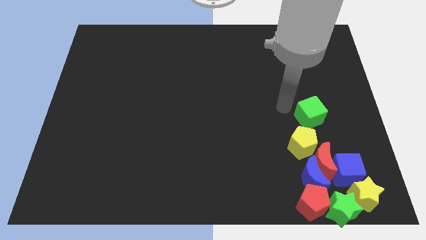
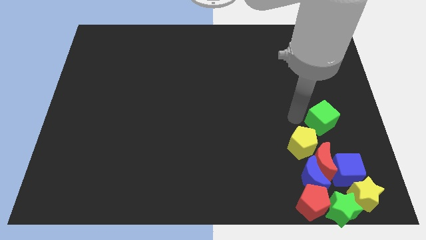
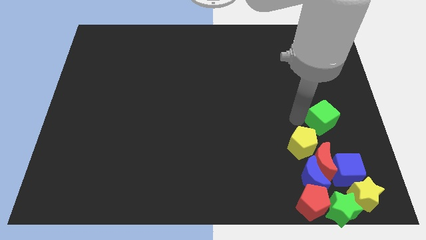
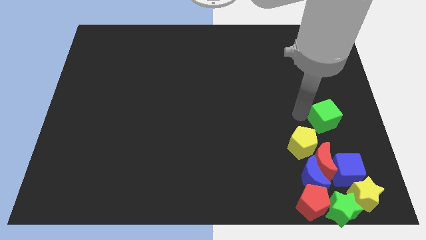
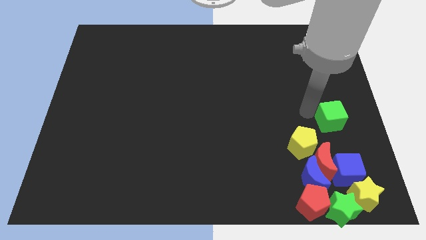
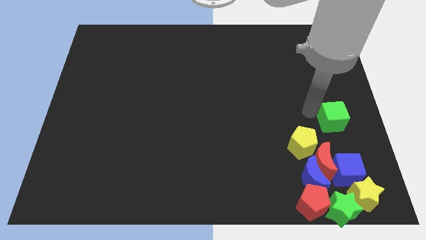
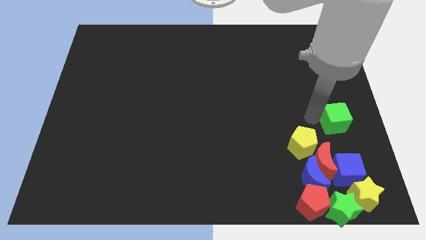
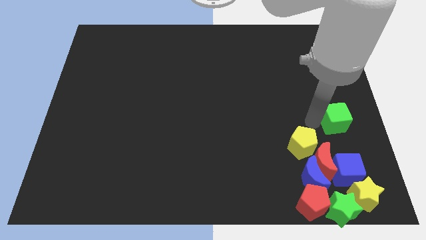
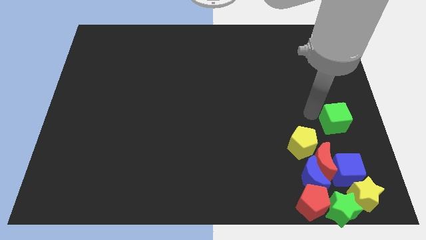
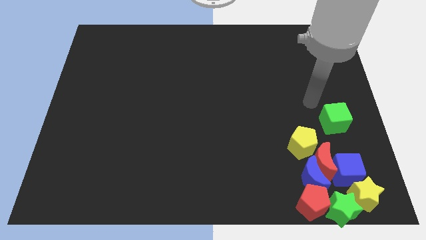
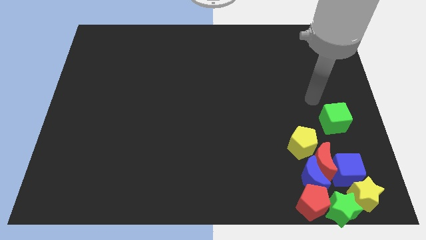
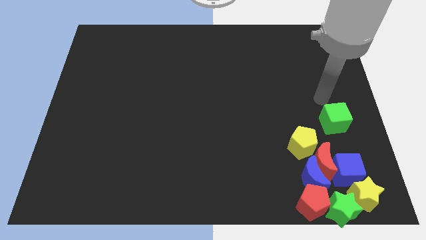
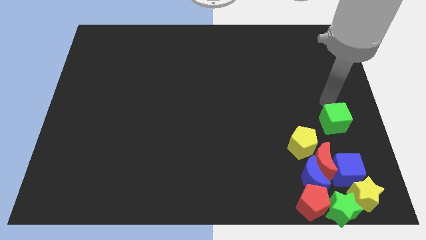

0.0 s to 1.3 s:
move the green cube above the blue cube

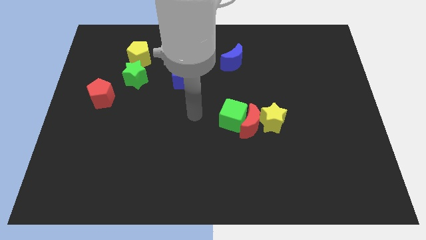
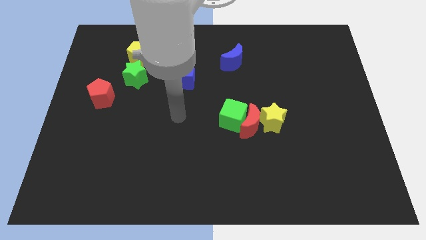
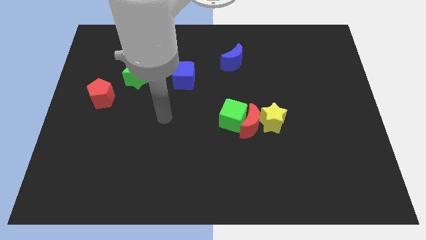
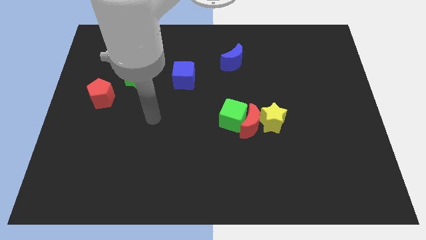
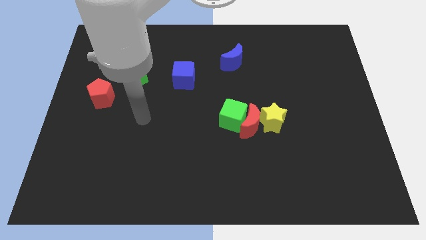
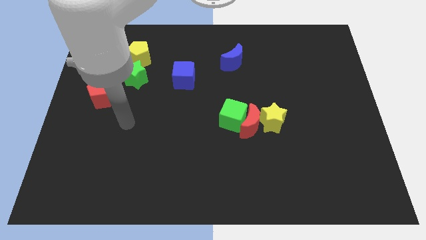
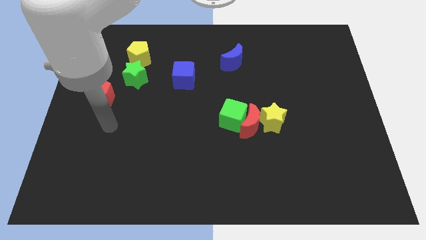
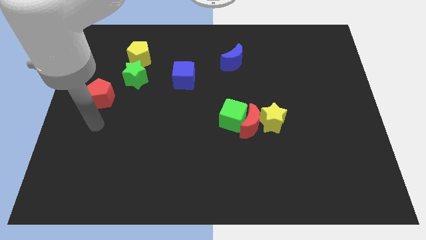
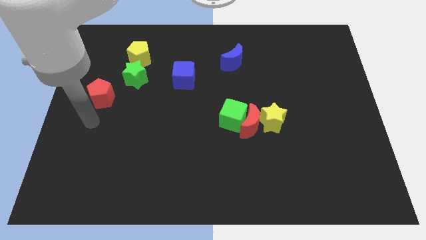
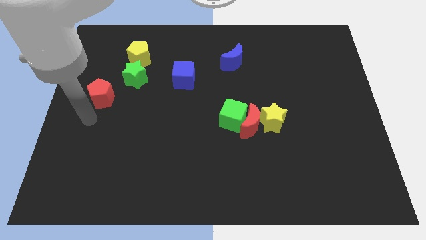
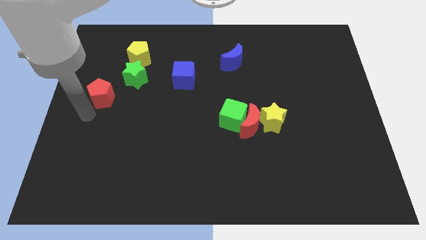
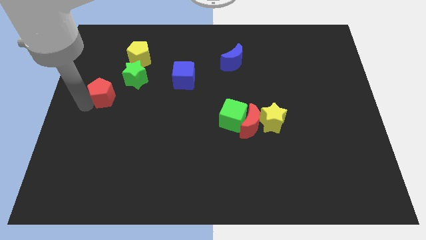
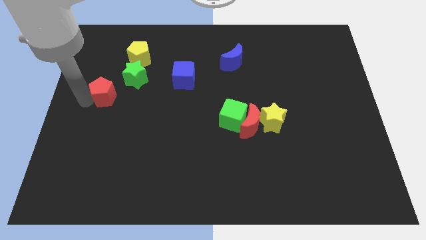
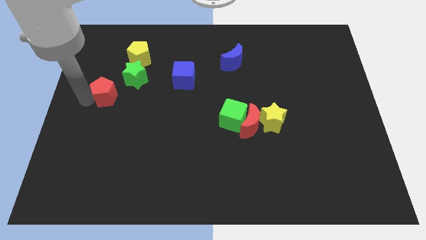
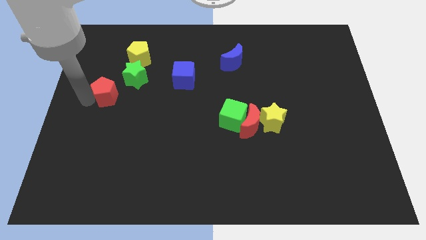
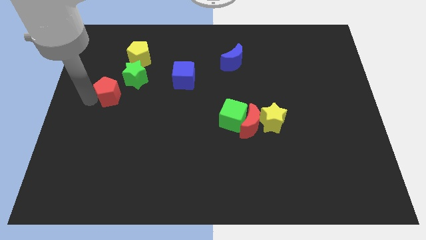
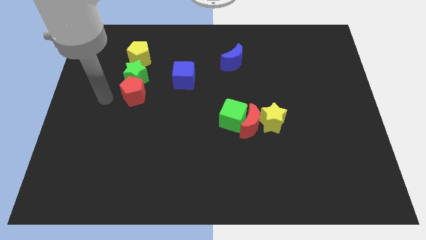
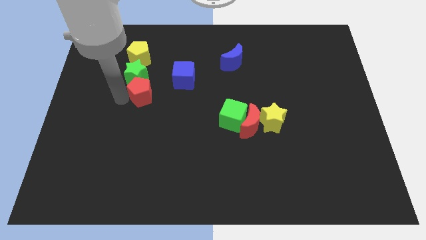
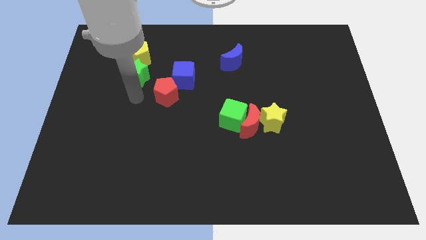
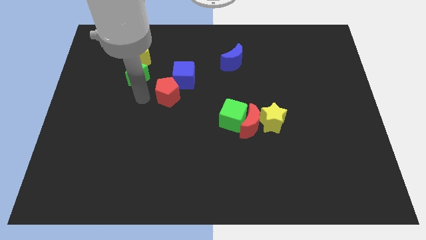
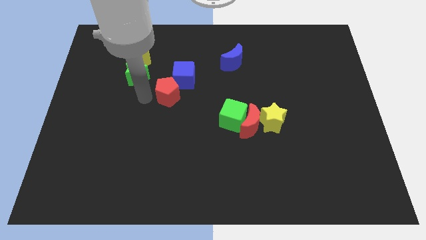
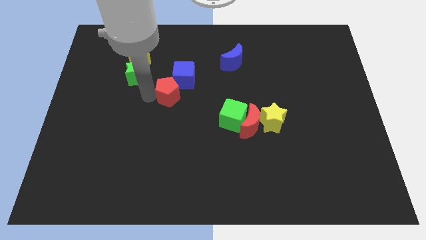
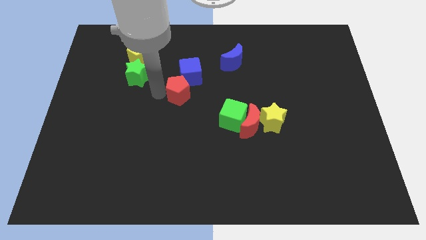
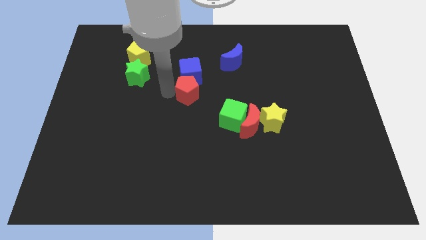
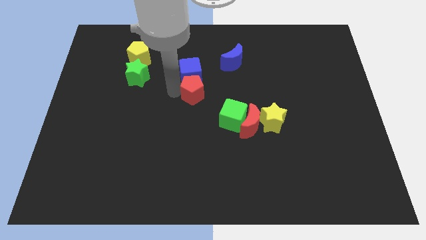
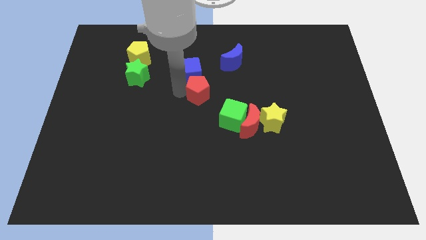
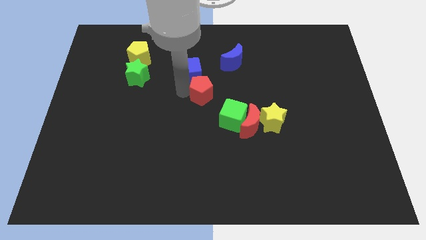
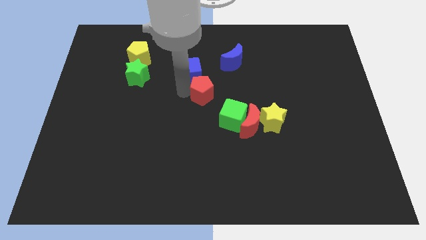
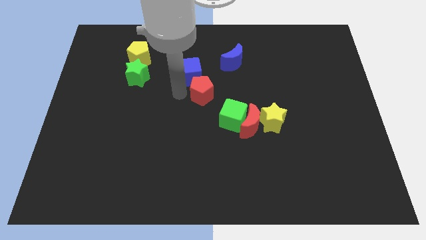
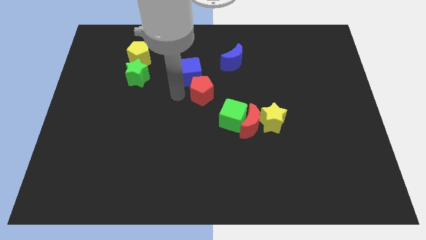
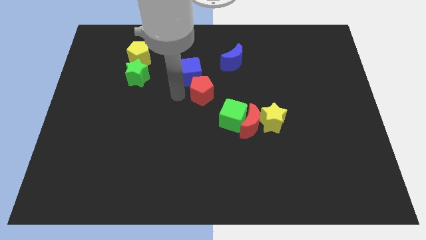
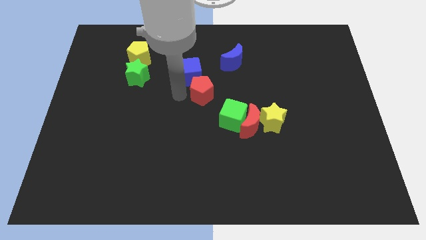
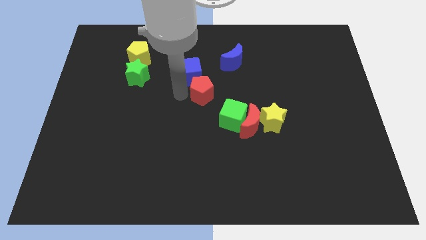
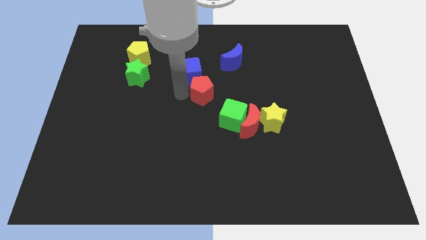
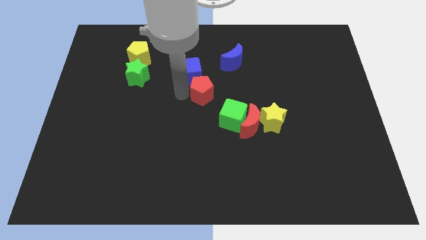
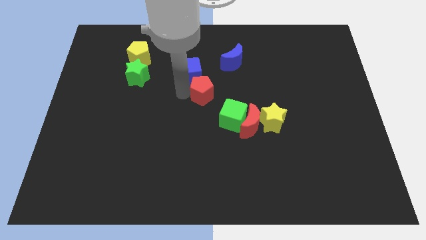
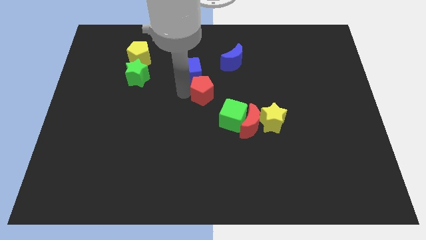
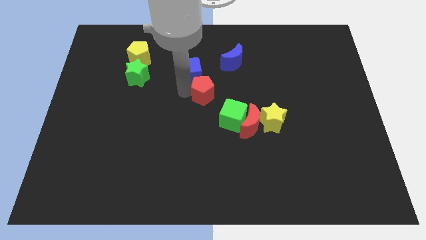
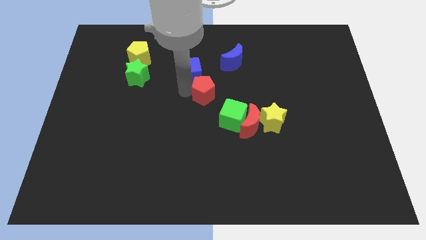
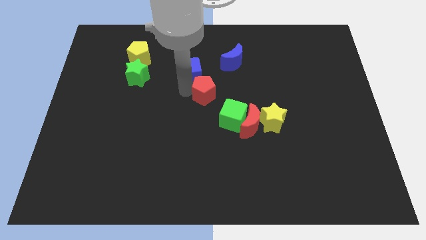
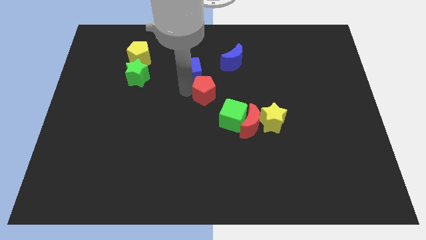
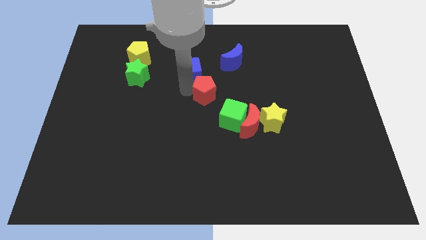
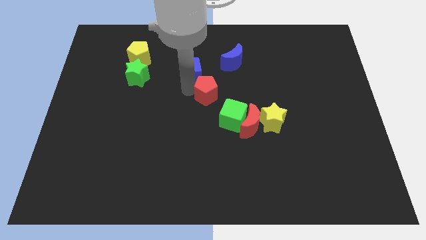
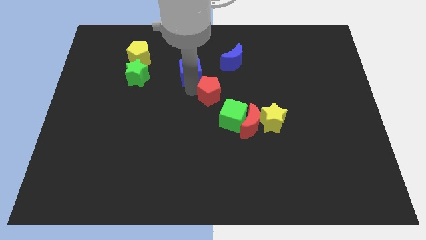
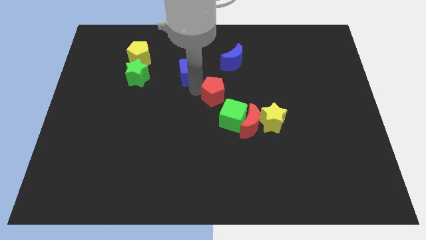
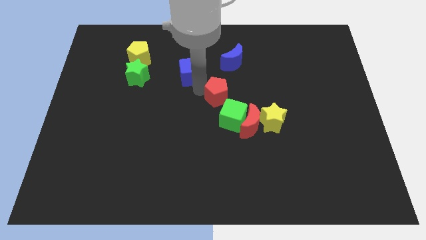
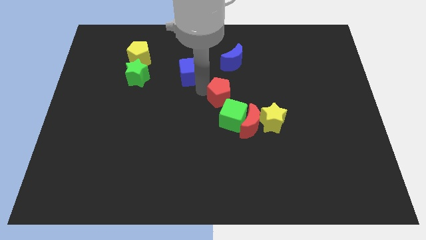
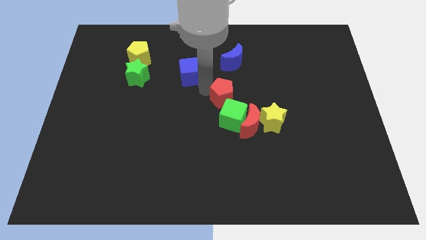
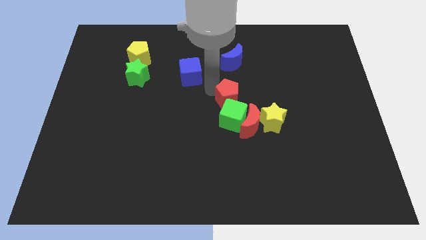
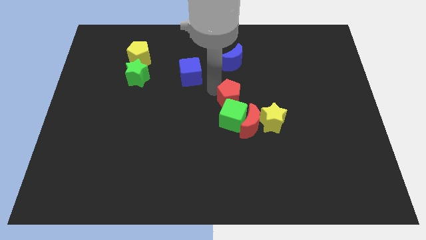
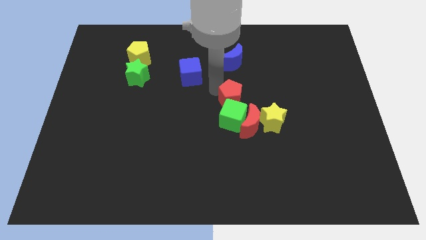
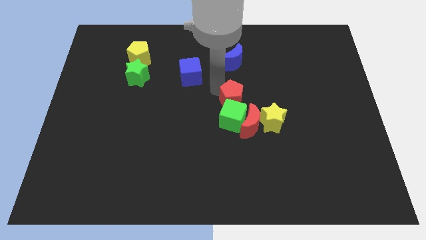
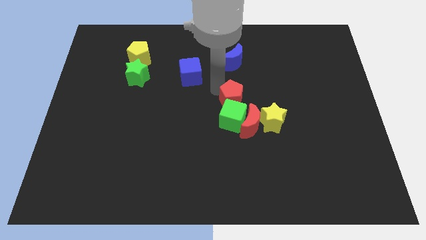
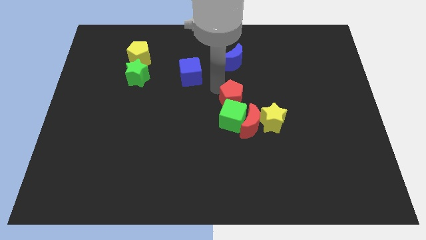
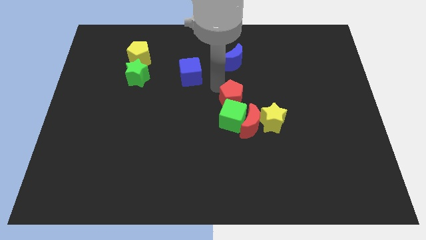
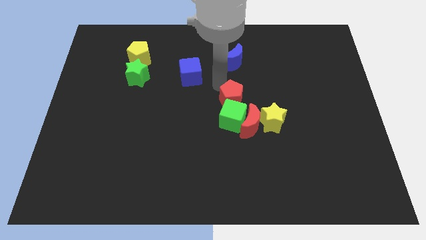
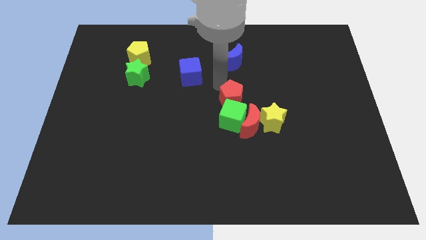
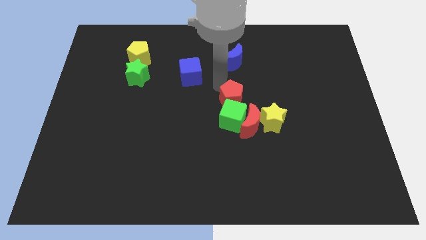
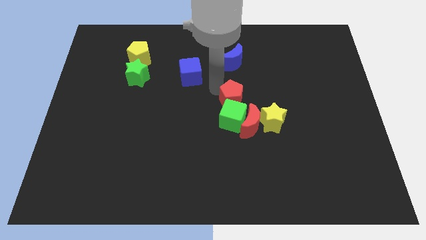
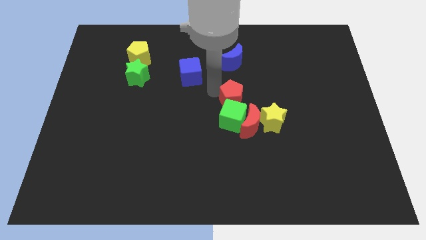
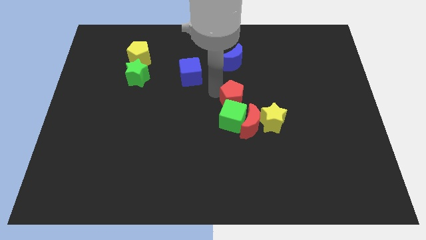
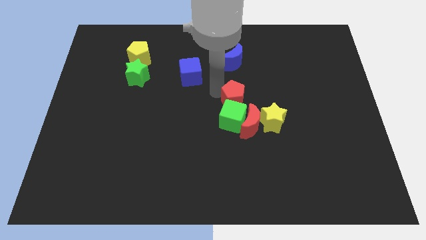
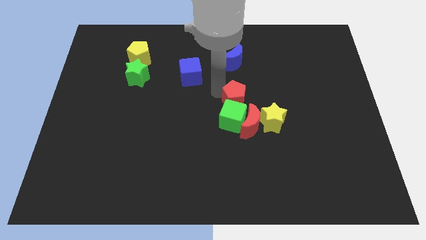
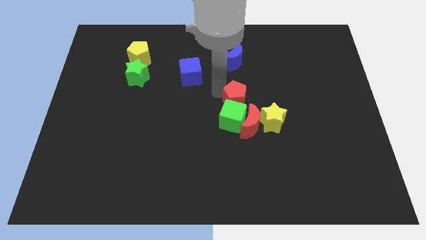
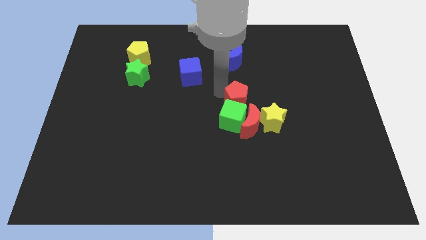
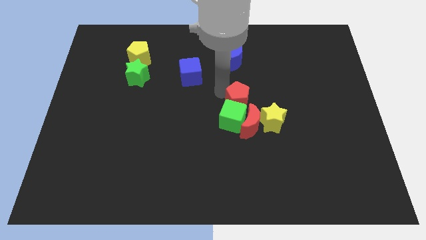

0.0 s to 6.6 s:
move the red pentagon to the top of green cube

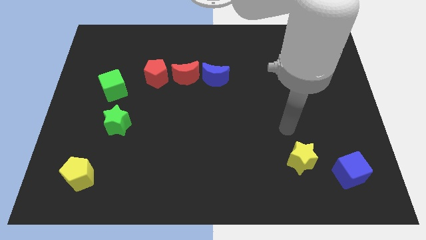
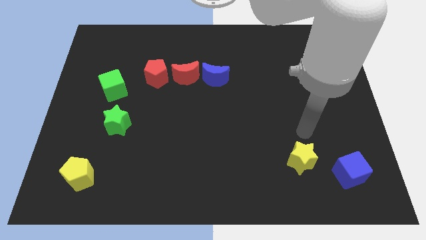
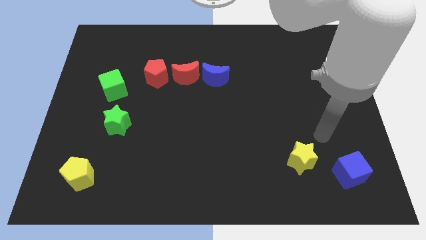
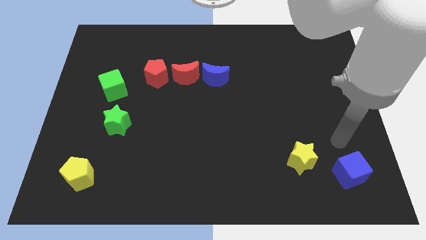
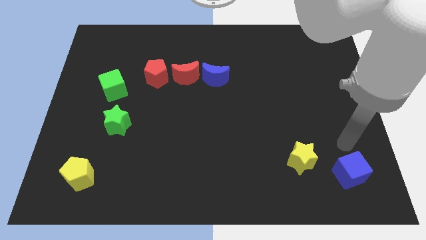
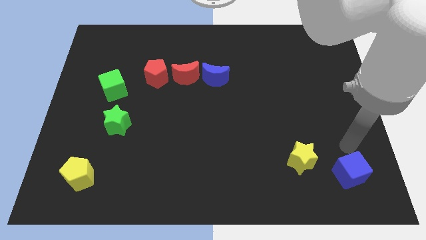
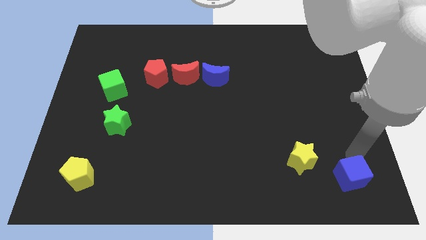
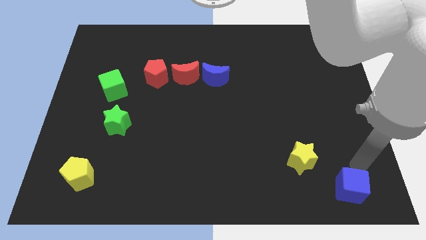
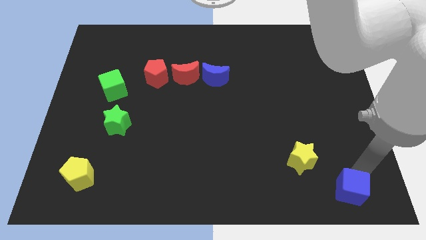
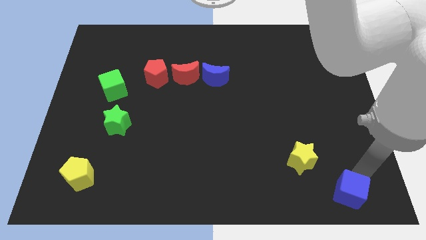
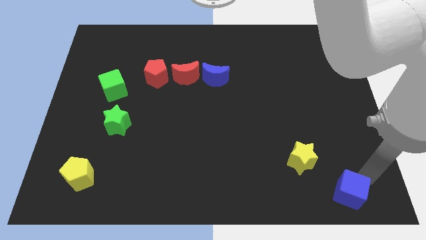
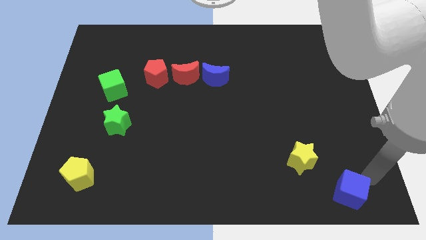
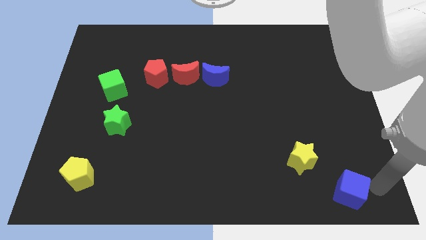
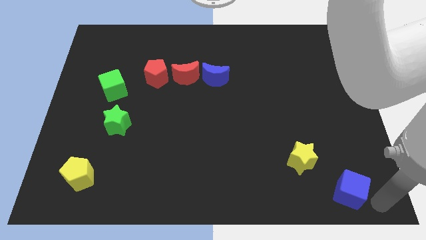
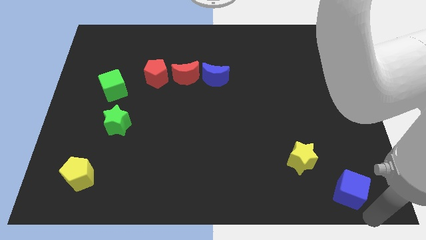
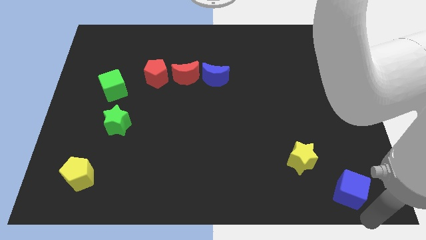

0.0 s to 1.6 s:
push blue cube towards the bottom of the board
